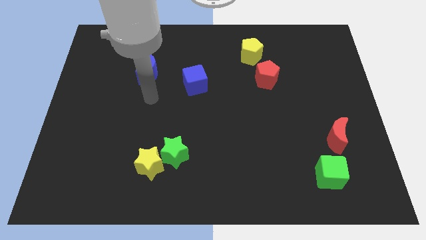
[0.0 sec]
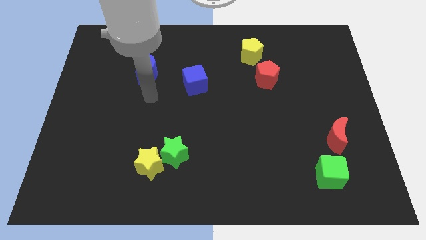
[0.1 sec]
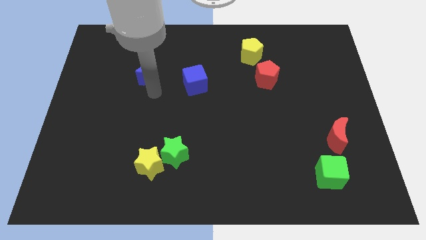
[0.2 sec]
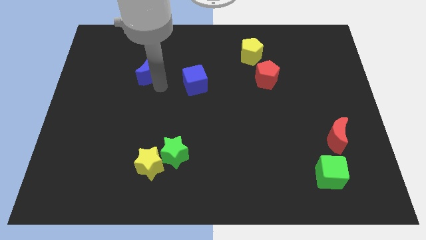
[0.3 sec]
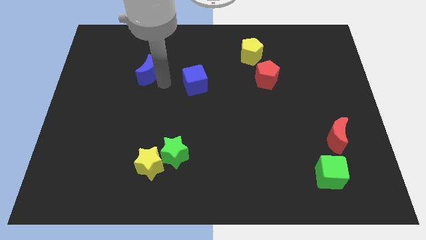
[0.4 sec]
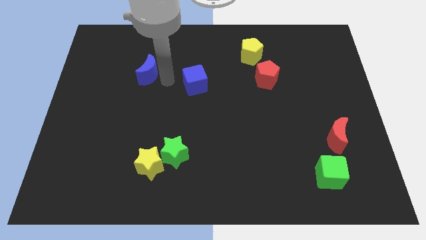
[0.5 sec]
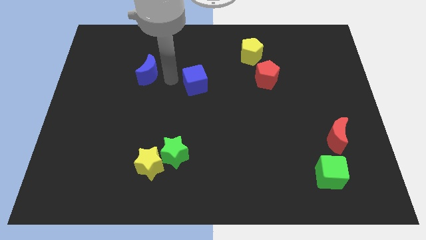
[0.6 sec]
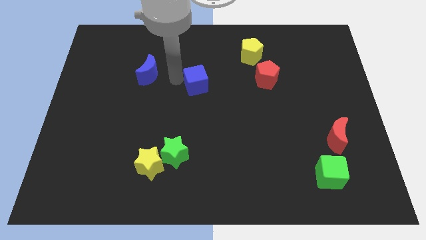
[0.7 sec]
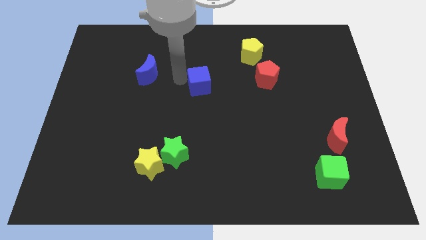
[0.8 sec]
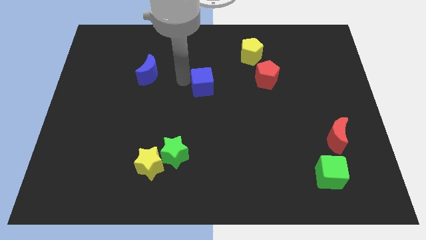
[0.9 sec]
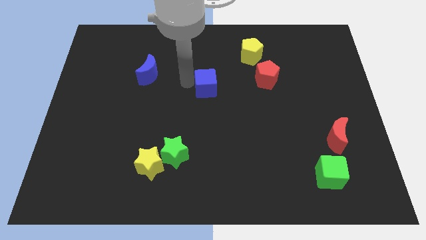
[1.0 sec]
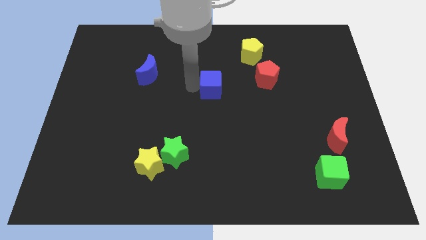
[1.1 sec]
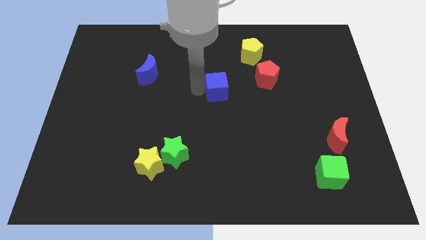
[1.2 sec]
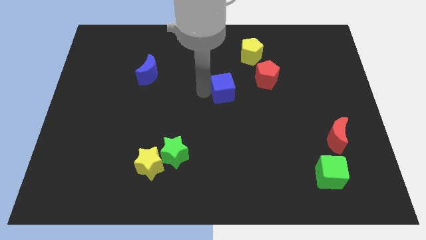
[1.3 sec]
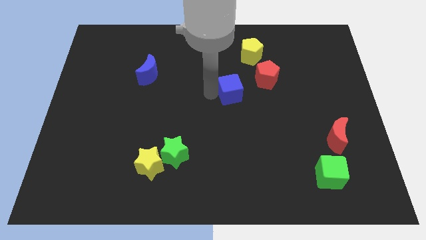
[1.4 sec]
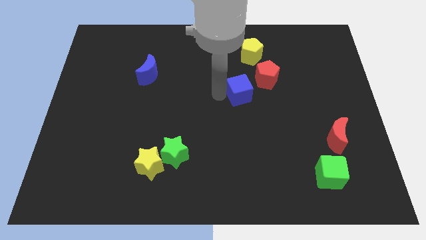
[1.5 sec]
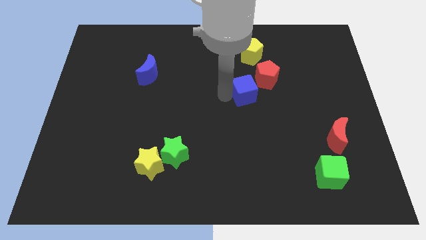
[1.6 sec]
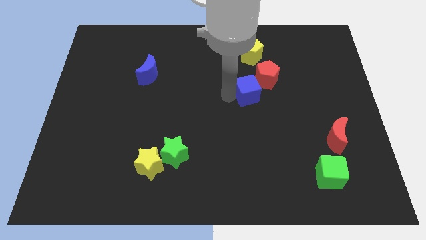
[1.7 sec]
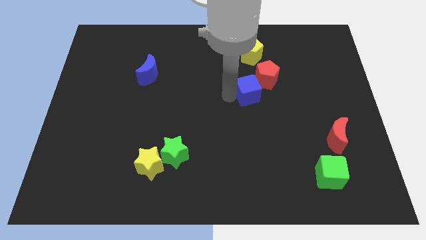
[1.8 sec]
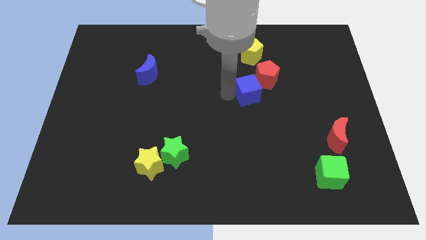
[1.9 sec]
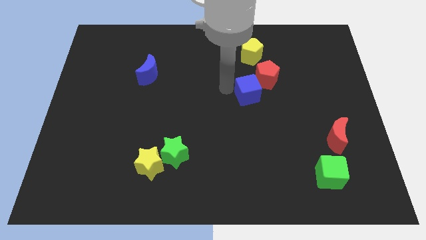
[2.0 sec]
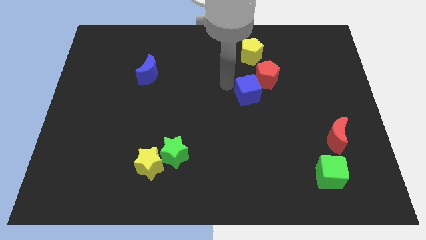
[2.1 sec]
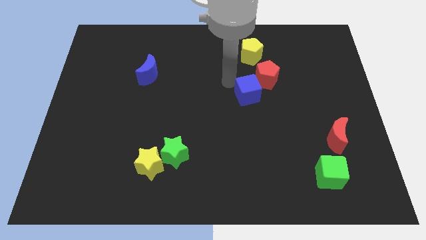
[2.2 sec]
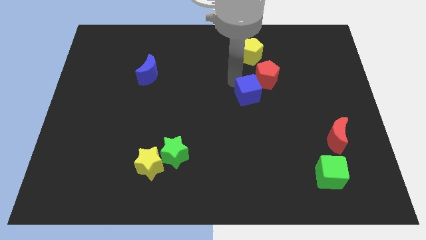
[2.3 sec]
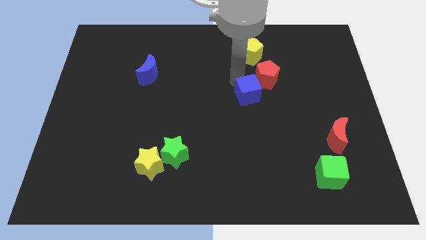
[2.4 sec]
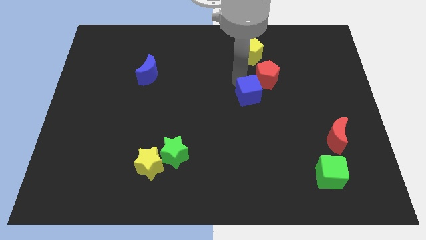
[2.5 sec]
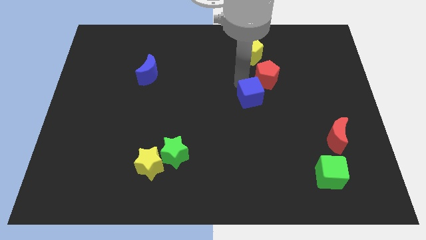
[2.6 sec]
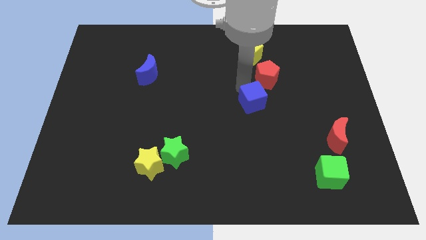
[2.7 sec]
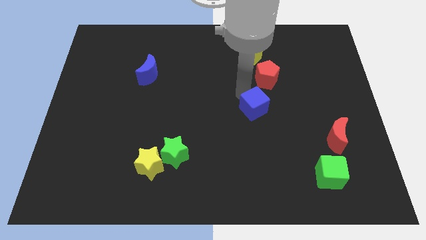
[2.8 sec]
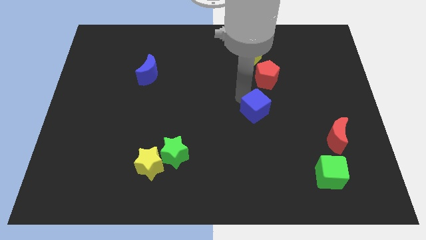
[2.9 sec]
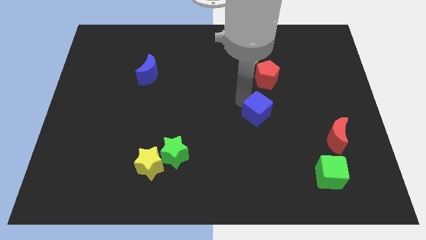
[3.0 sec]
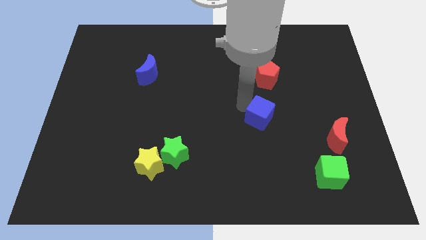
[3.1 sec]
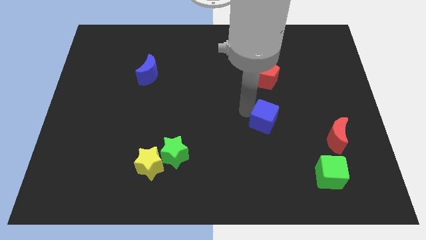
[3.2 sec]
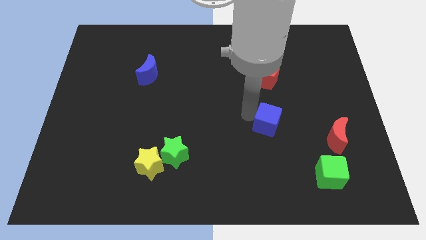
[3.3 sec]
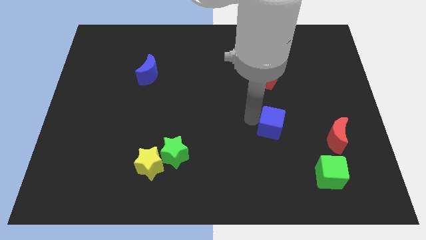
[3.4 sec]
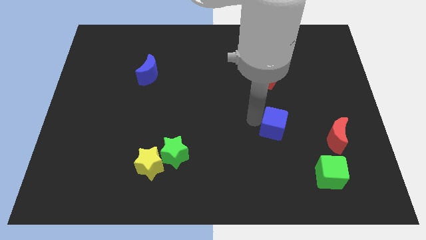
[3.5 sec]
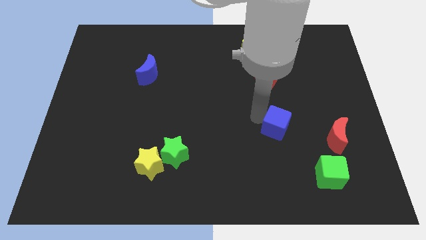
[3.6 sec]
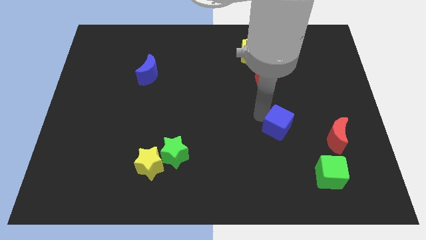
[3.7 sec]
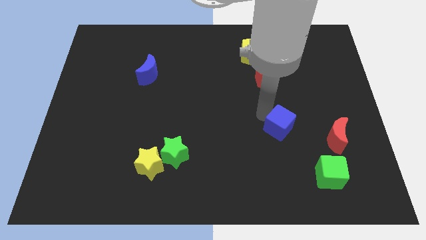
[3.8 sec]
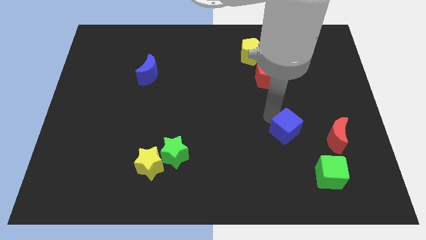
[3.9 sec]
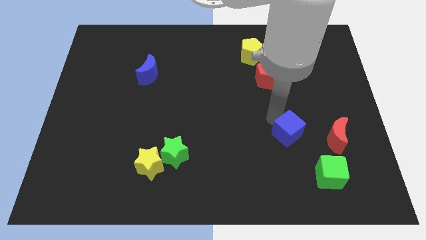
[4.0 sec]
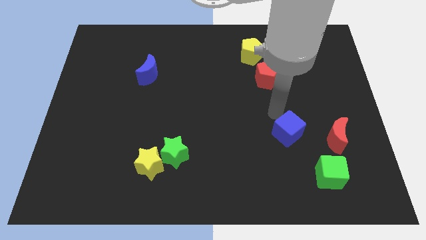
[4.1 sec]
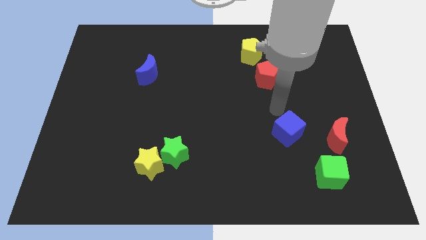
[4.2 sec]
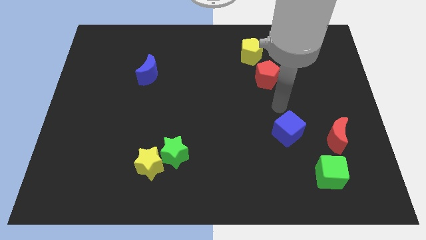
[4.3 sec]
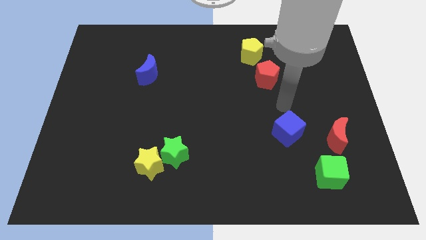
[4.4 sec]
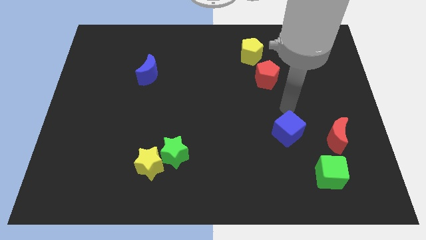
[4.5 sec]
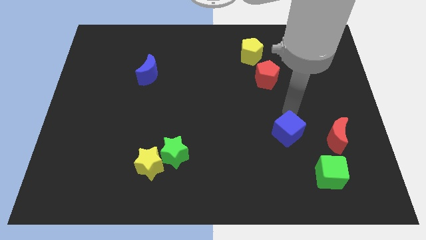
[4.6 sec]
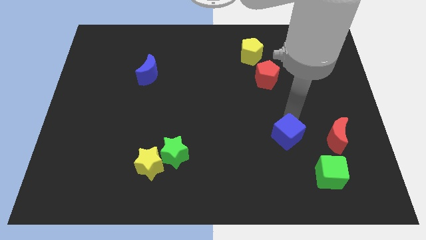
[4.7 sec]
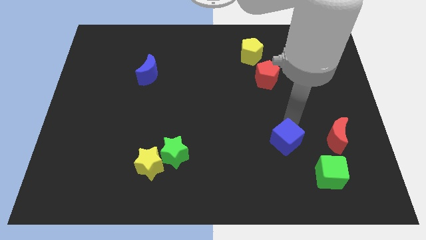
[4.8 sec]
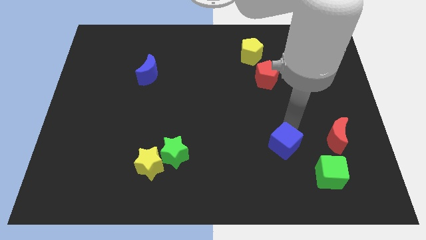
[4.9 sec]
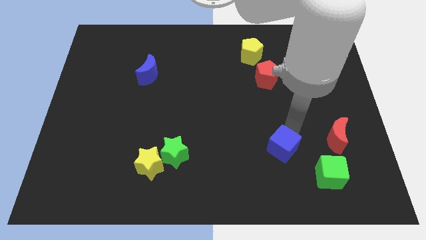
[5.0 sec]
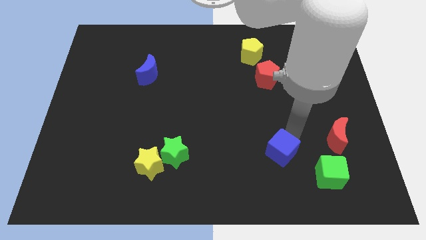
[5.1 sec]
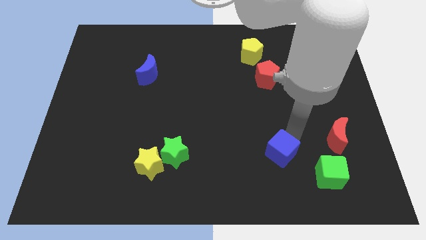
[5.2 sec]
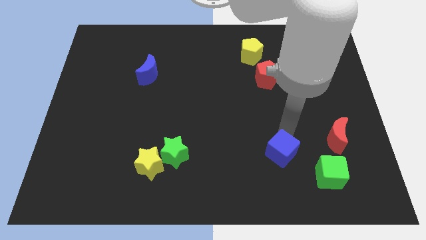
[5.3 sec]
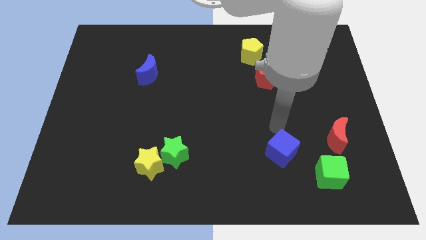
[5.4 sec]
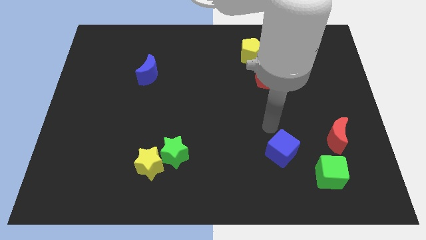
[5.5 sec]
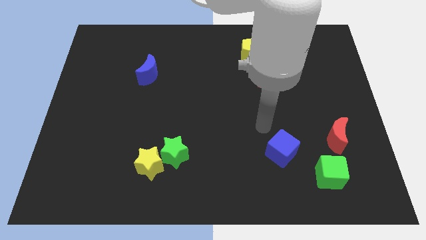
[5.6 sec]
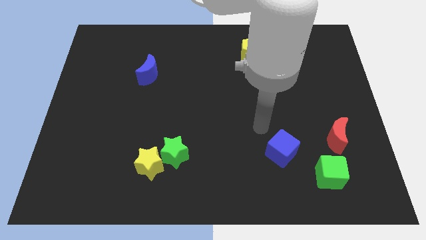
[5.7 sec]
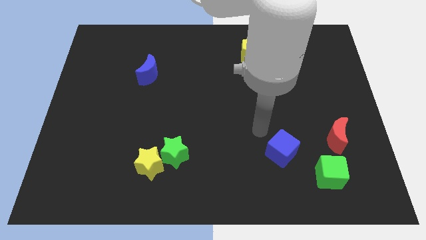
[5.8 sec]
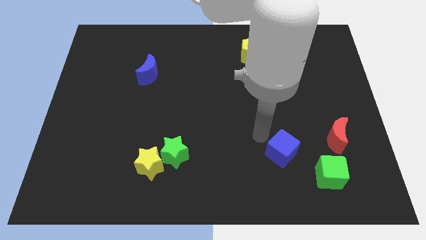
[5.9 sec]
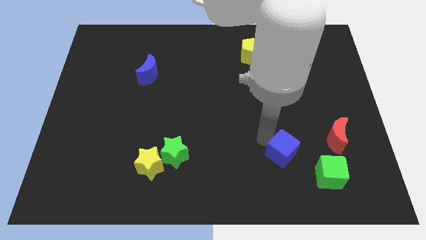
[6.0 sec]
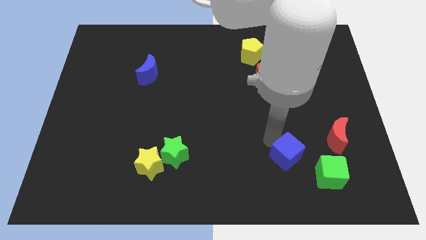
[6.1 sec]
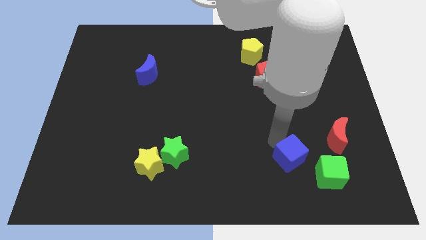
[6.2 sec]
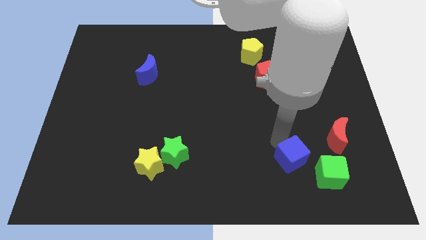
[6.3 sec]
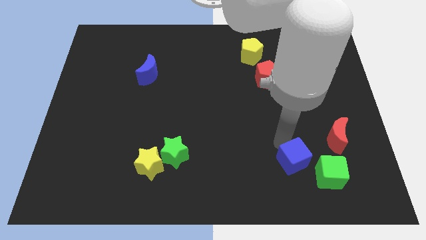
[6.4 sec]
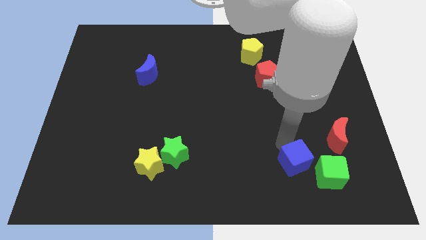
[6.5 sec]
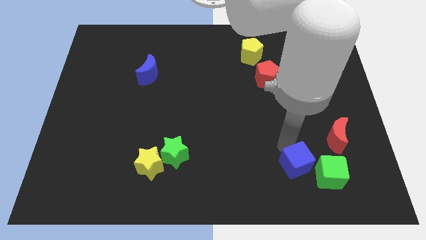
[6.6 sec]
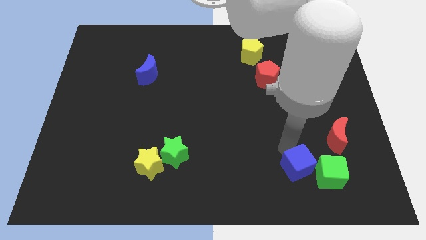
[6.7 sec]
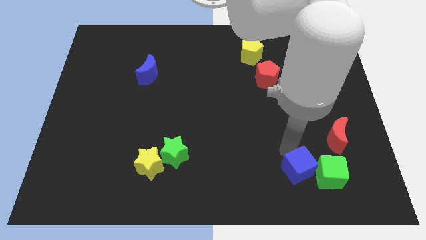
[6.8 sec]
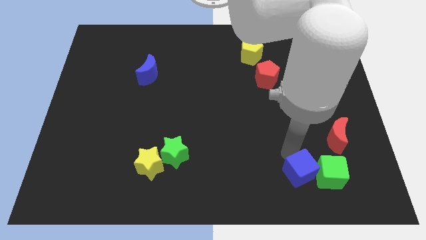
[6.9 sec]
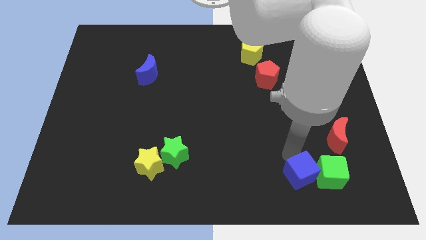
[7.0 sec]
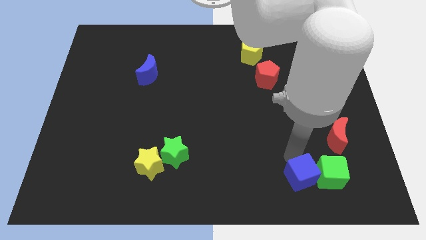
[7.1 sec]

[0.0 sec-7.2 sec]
move the blue cube close to the green cube

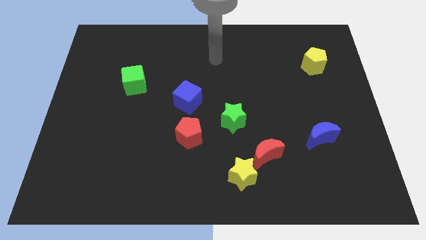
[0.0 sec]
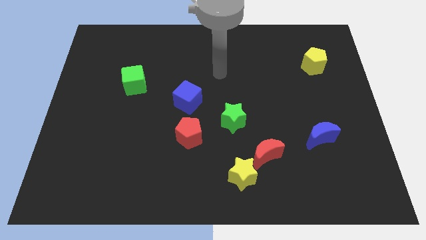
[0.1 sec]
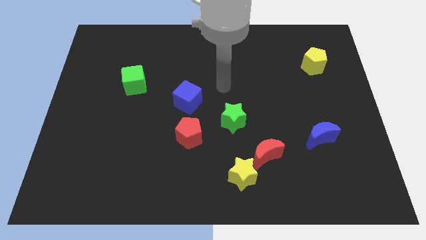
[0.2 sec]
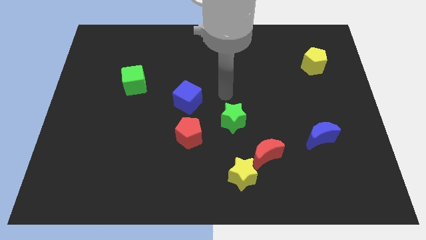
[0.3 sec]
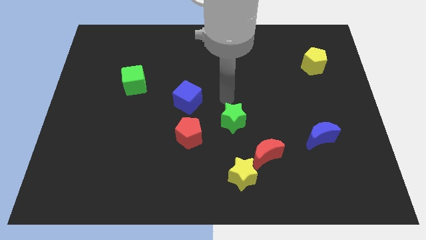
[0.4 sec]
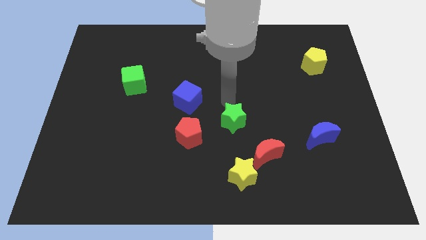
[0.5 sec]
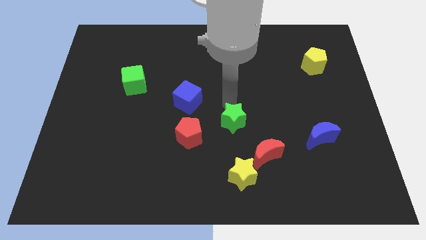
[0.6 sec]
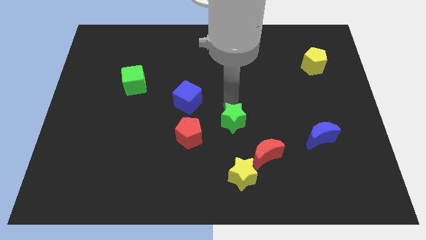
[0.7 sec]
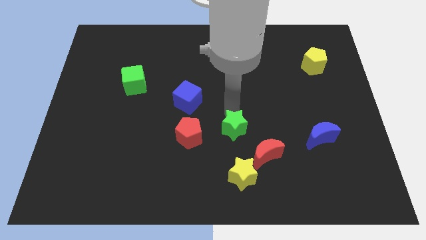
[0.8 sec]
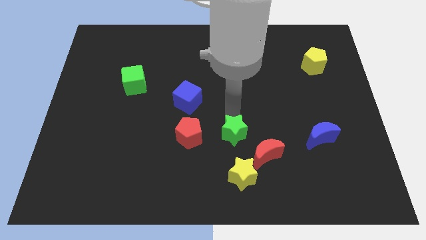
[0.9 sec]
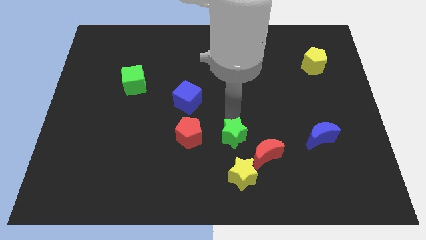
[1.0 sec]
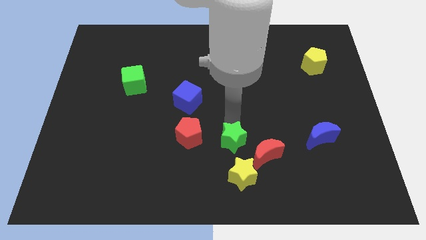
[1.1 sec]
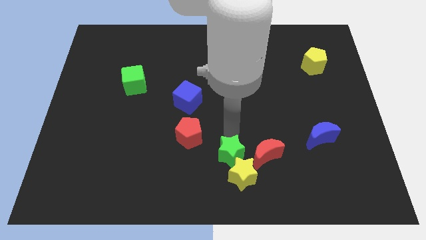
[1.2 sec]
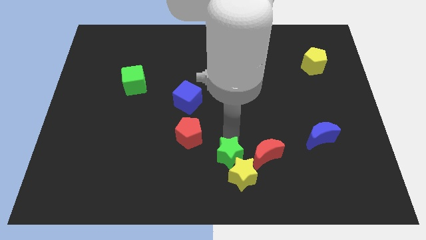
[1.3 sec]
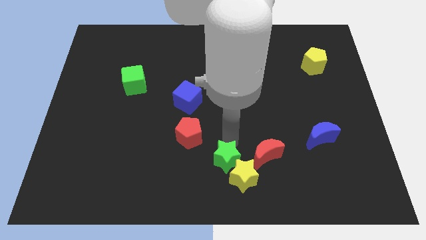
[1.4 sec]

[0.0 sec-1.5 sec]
slide the green star close to the yellow star
